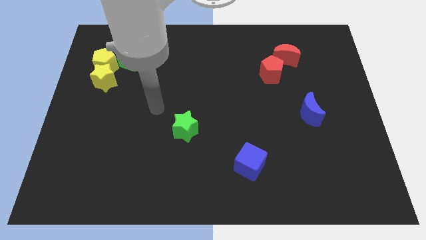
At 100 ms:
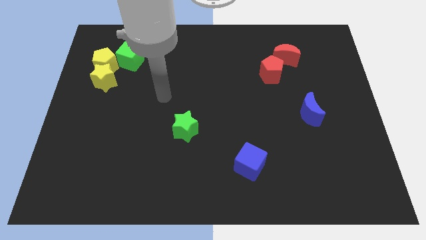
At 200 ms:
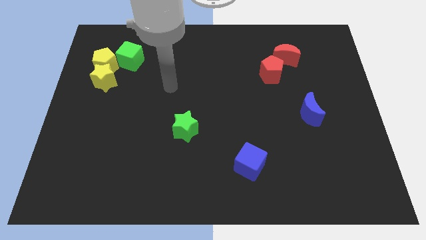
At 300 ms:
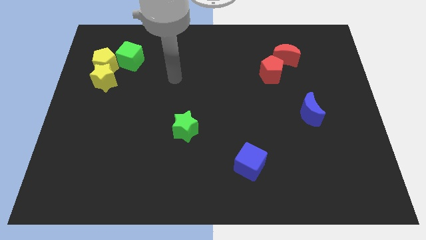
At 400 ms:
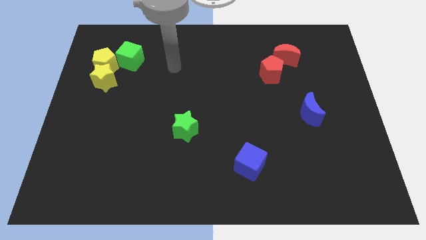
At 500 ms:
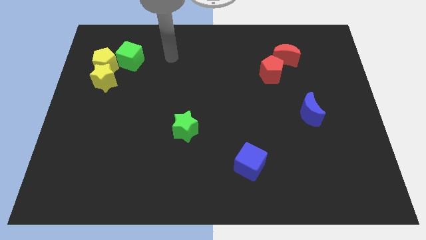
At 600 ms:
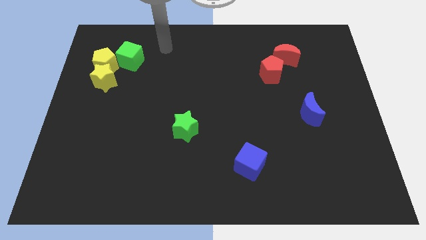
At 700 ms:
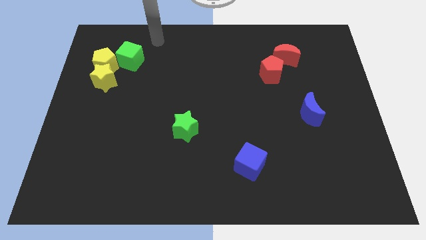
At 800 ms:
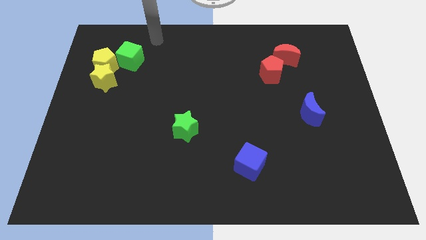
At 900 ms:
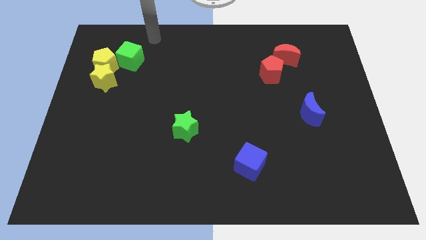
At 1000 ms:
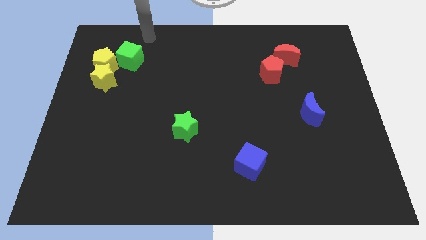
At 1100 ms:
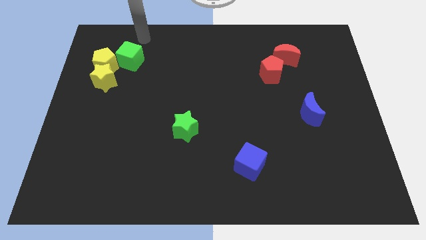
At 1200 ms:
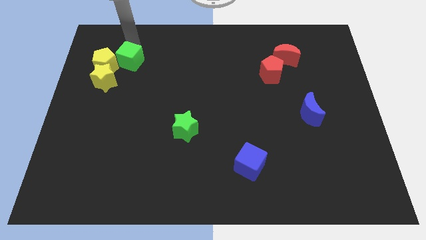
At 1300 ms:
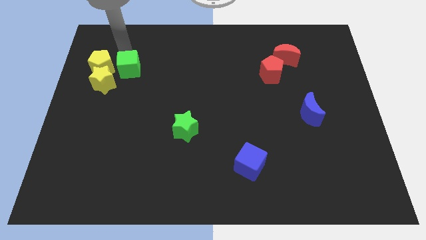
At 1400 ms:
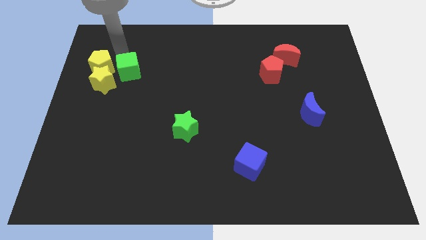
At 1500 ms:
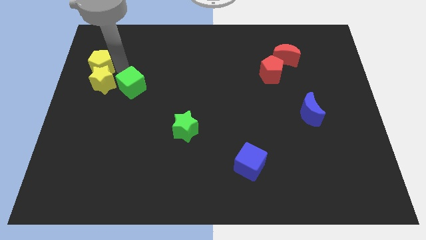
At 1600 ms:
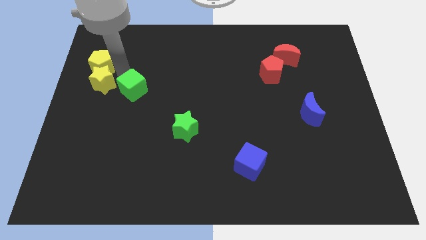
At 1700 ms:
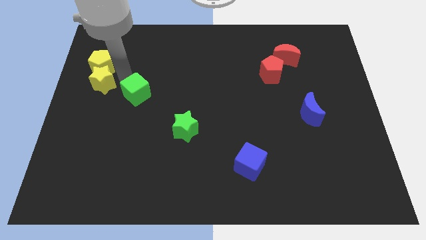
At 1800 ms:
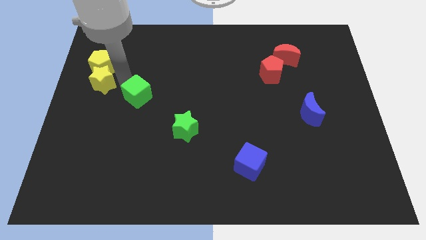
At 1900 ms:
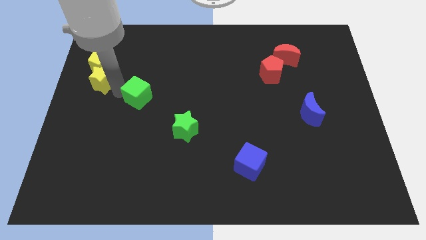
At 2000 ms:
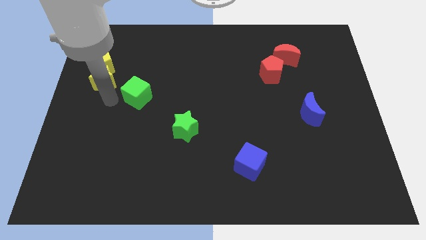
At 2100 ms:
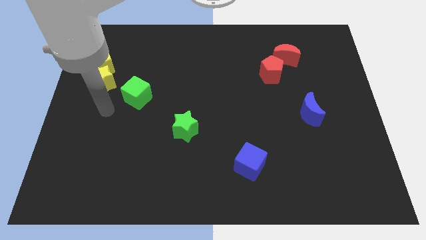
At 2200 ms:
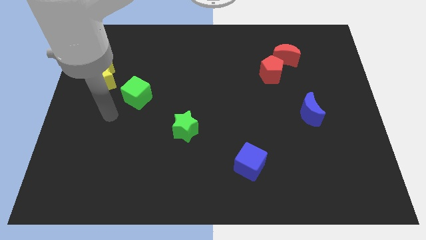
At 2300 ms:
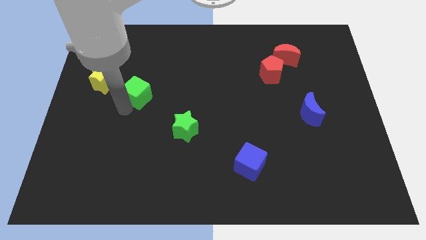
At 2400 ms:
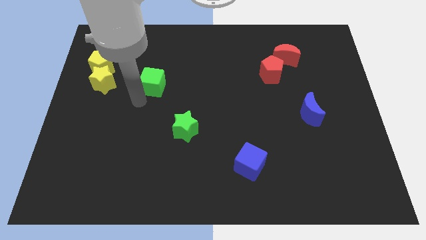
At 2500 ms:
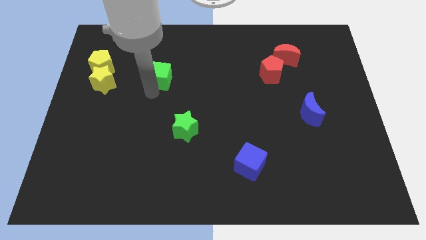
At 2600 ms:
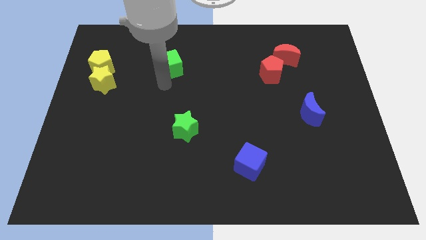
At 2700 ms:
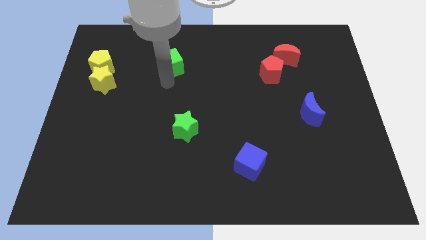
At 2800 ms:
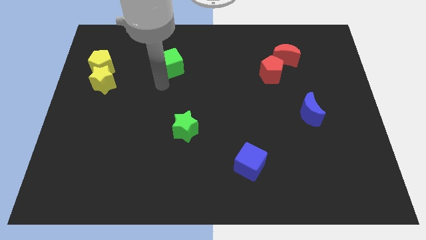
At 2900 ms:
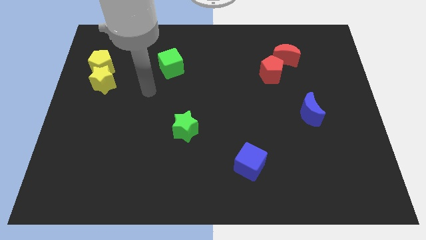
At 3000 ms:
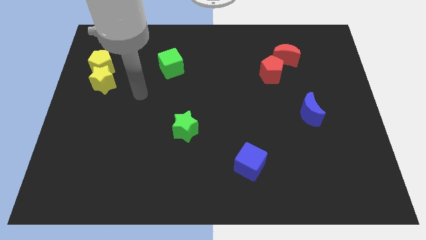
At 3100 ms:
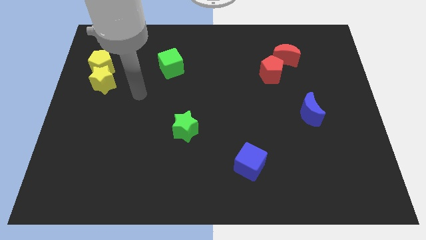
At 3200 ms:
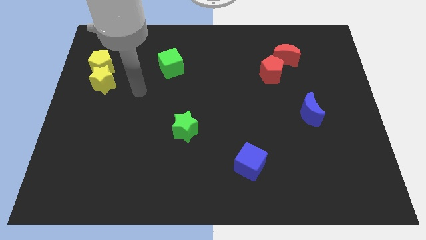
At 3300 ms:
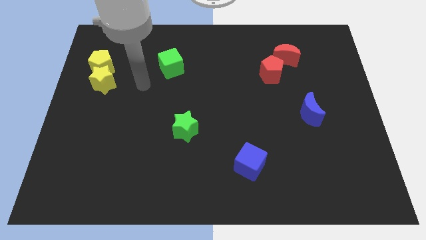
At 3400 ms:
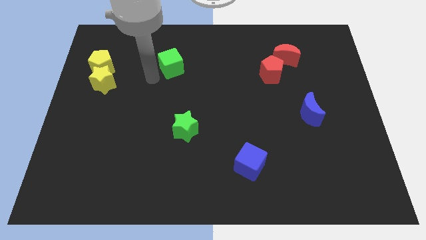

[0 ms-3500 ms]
separate green cube and yellow pentagon

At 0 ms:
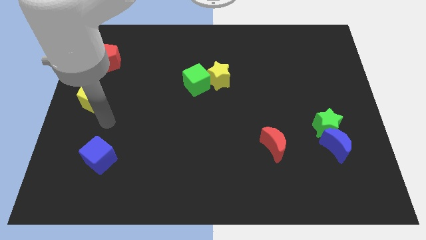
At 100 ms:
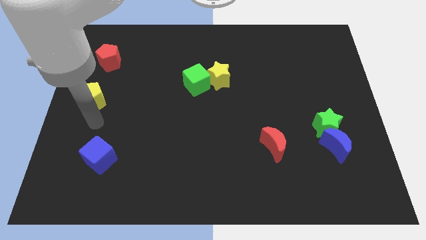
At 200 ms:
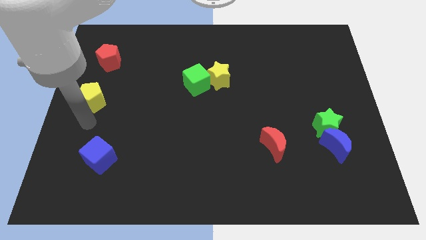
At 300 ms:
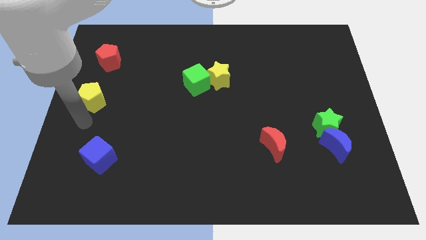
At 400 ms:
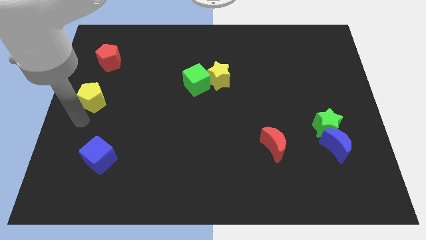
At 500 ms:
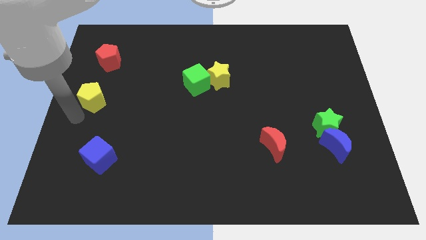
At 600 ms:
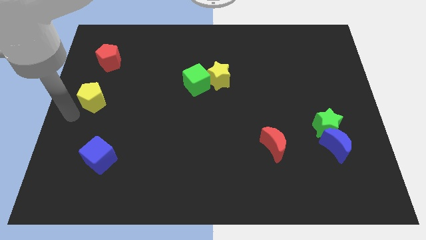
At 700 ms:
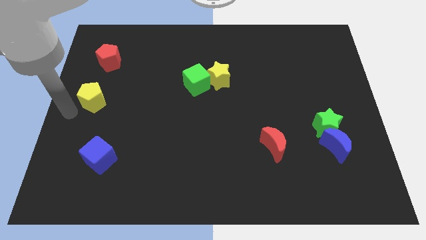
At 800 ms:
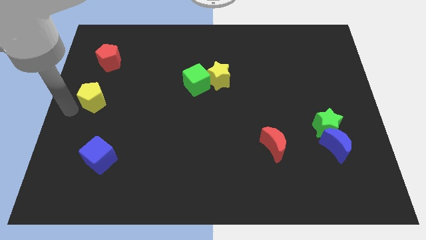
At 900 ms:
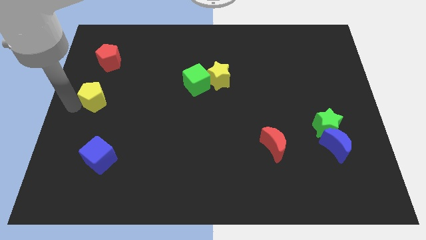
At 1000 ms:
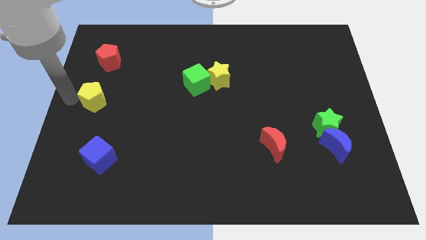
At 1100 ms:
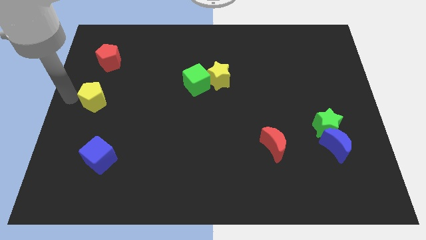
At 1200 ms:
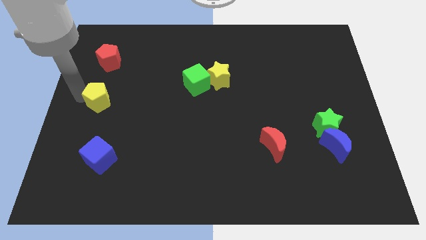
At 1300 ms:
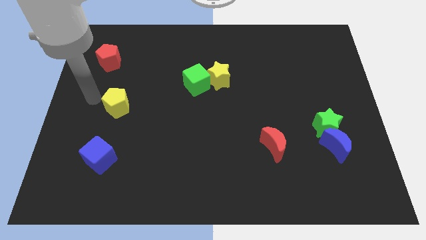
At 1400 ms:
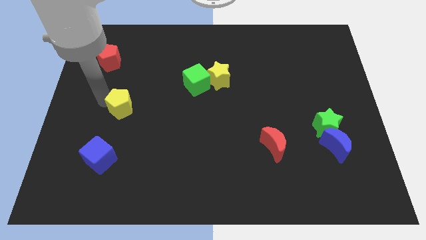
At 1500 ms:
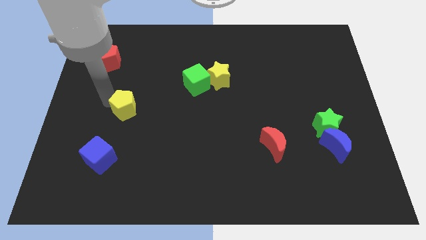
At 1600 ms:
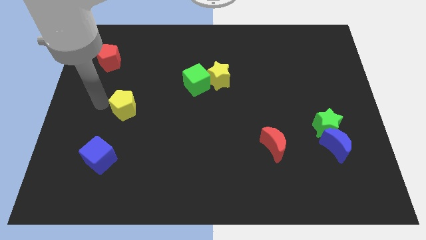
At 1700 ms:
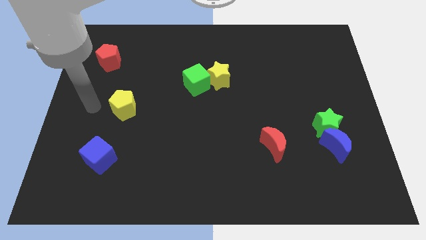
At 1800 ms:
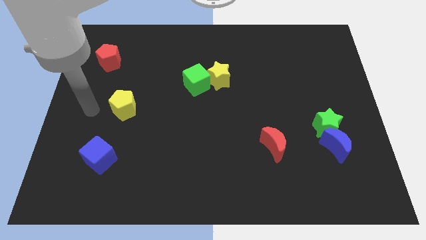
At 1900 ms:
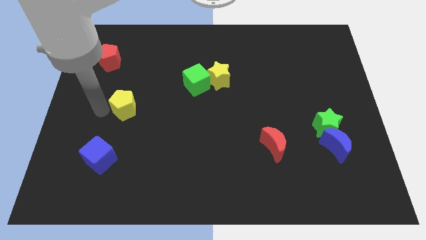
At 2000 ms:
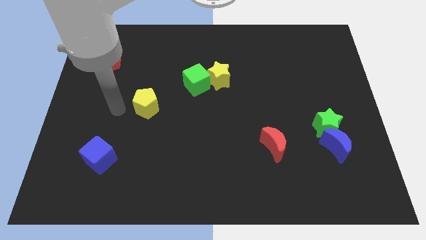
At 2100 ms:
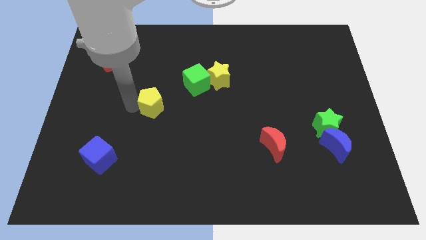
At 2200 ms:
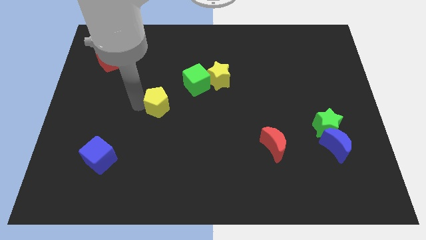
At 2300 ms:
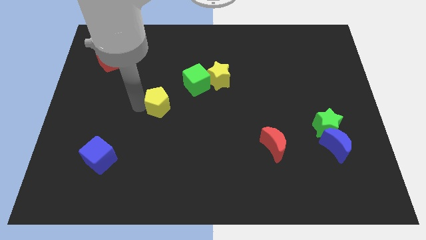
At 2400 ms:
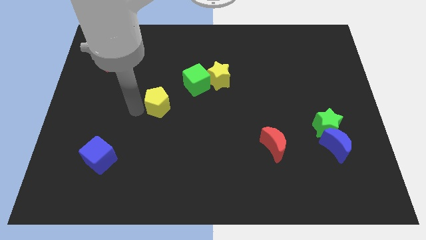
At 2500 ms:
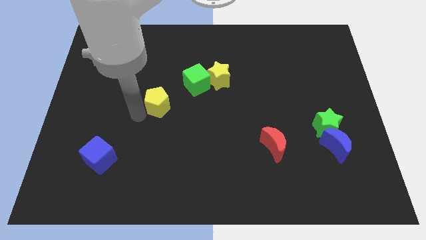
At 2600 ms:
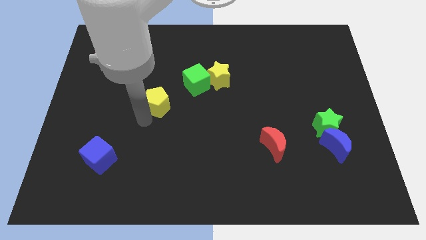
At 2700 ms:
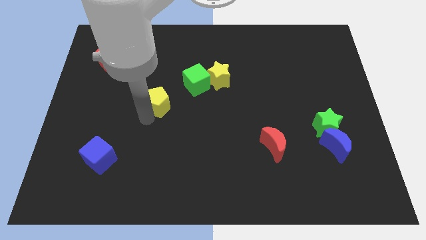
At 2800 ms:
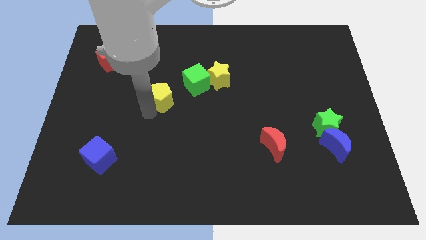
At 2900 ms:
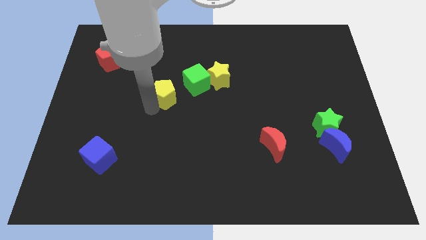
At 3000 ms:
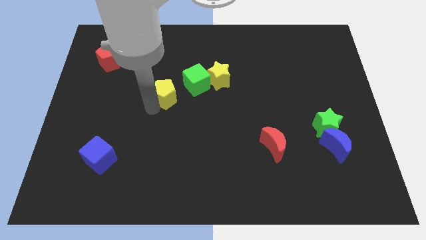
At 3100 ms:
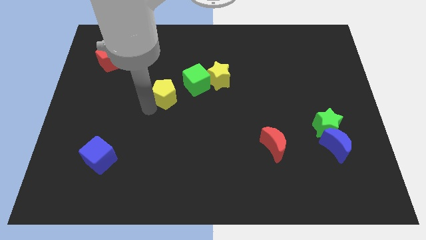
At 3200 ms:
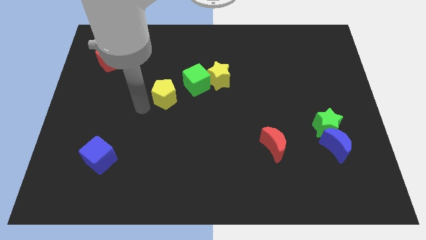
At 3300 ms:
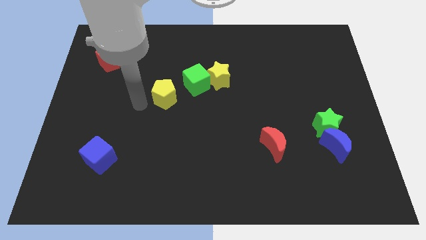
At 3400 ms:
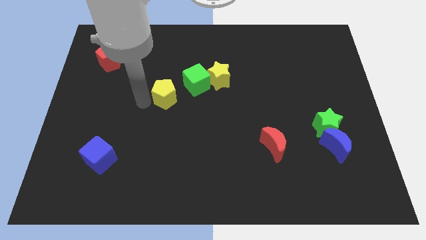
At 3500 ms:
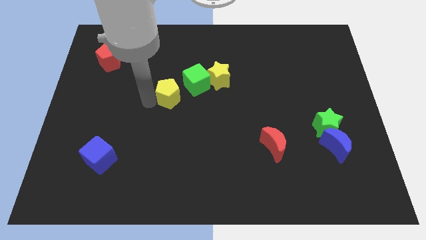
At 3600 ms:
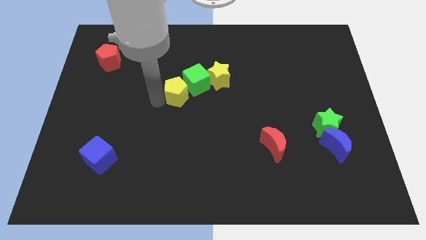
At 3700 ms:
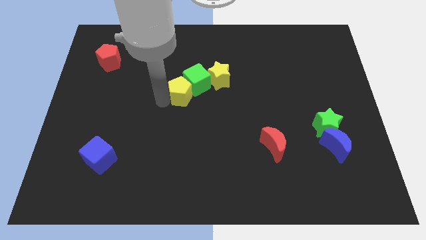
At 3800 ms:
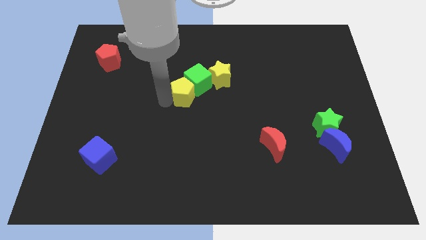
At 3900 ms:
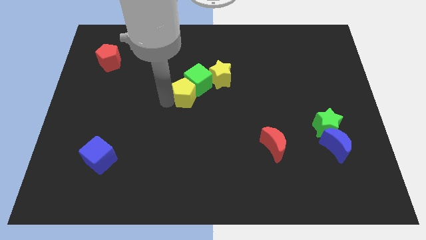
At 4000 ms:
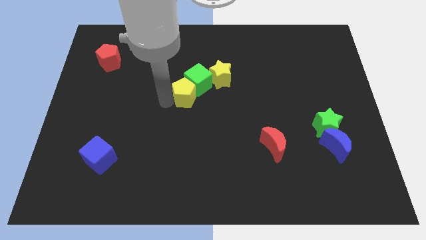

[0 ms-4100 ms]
move the yellow pentagon into the green cube

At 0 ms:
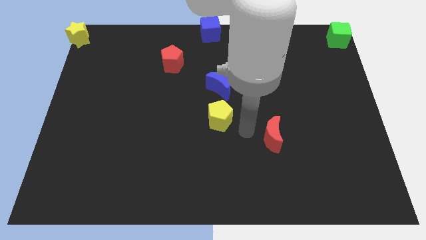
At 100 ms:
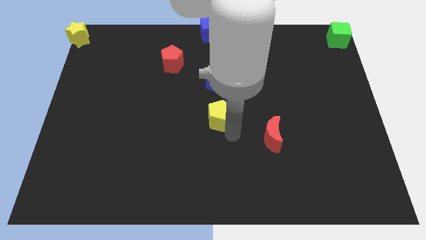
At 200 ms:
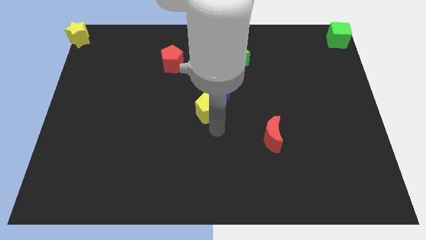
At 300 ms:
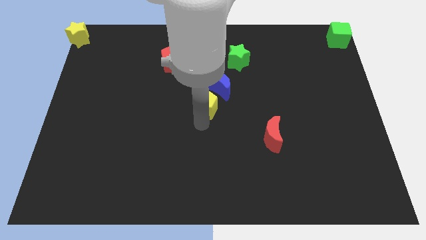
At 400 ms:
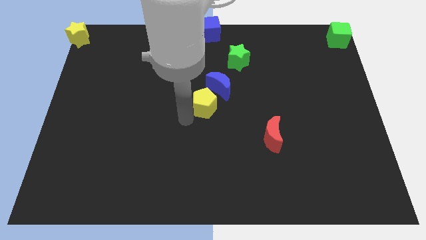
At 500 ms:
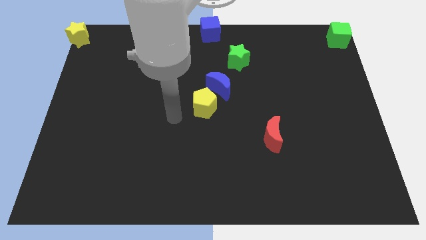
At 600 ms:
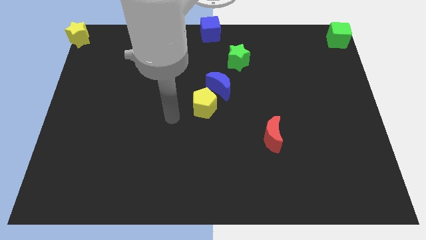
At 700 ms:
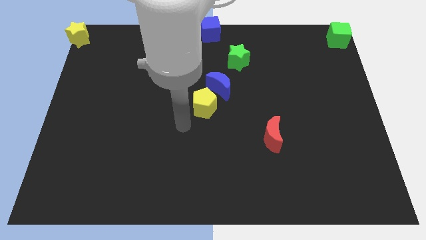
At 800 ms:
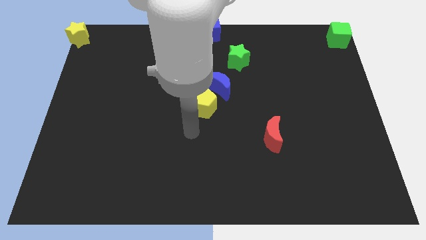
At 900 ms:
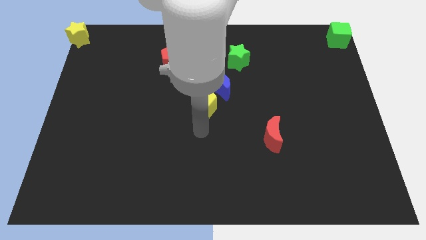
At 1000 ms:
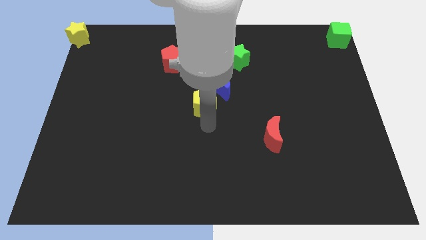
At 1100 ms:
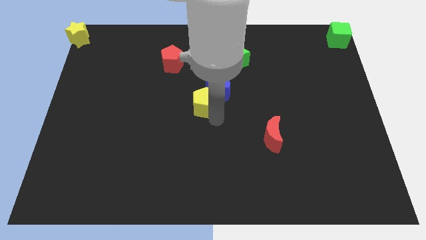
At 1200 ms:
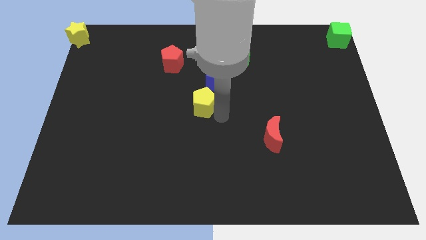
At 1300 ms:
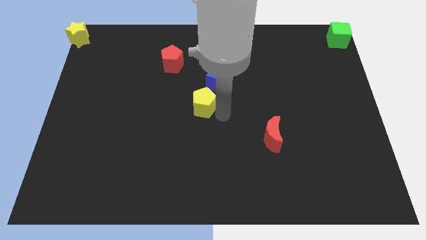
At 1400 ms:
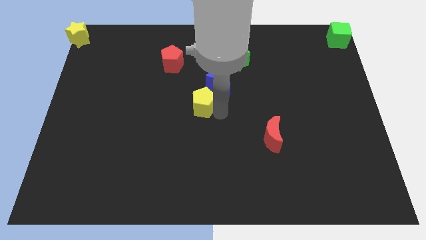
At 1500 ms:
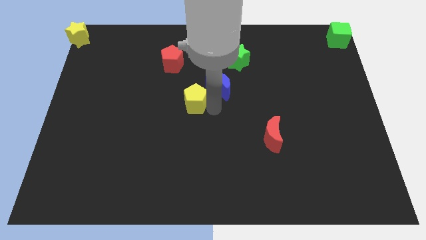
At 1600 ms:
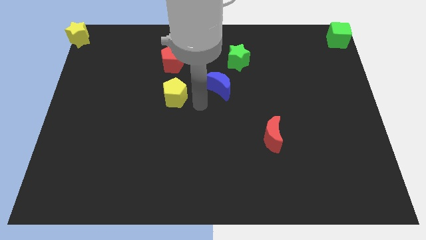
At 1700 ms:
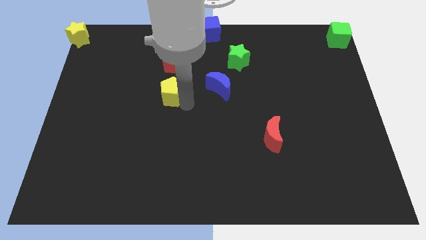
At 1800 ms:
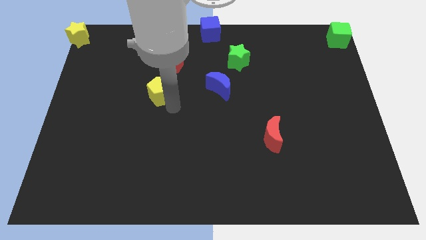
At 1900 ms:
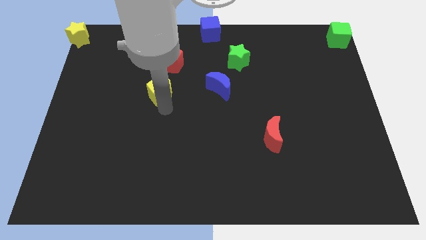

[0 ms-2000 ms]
move the yellow pentagon horizontally left to the blue moon
